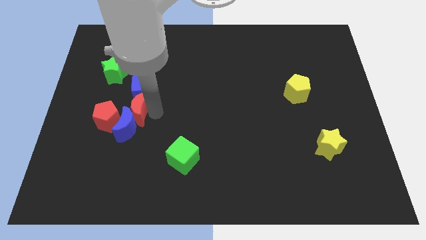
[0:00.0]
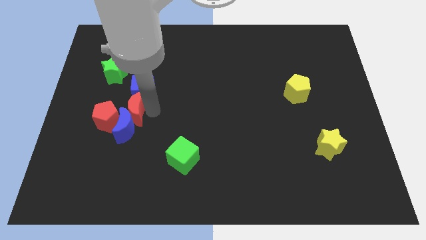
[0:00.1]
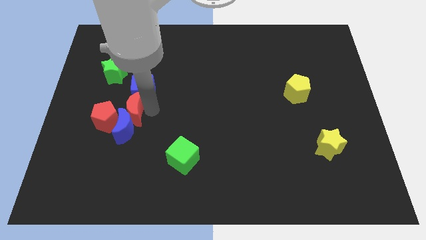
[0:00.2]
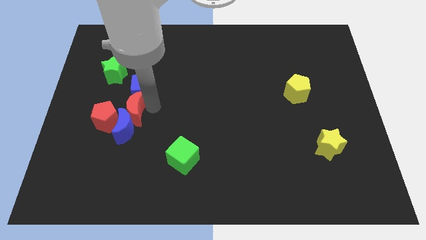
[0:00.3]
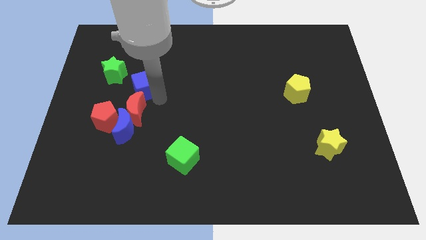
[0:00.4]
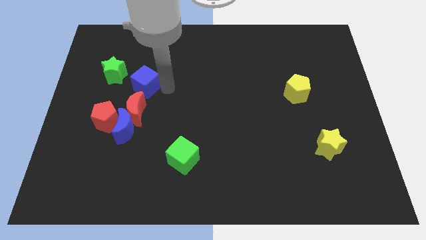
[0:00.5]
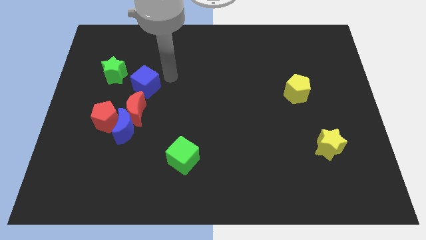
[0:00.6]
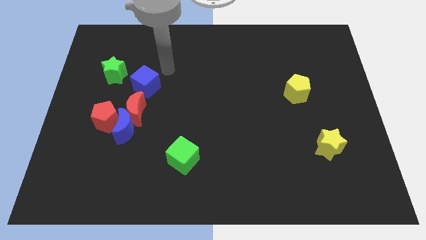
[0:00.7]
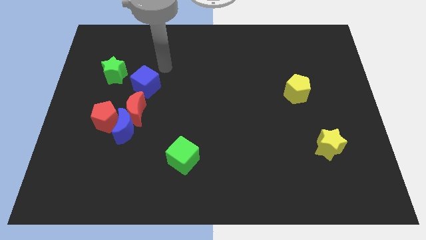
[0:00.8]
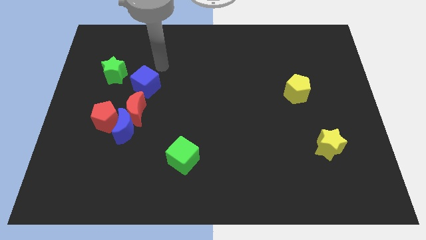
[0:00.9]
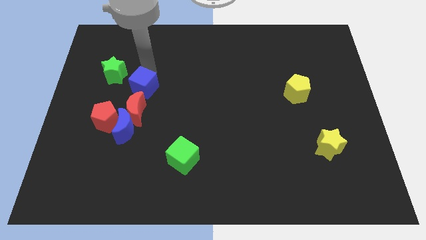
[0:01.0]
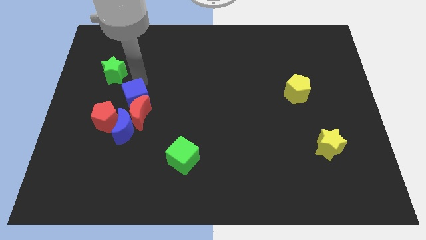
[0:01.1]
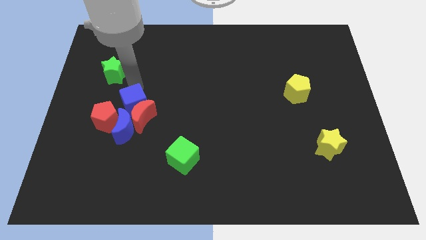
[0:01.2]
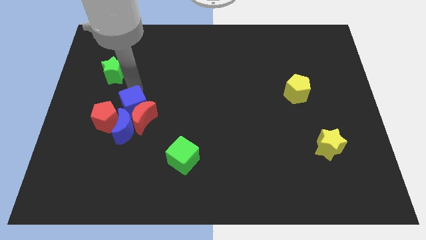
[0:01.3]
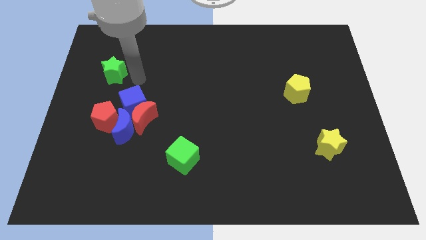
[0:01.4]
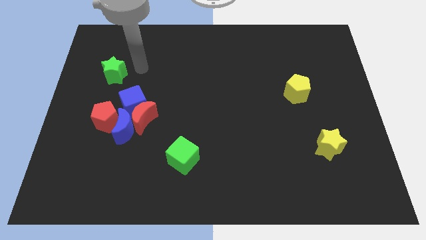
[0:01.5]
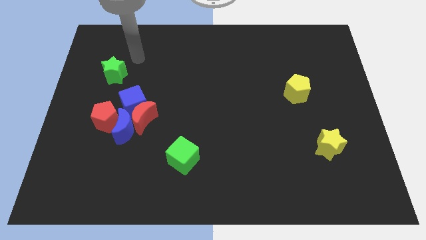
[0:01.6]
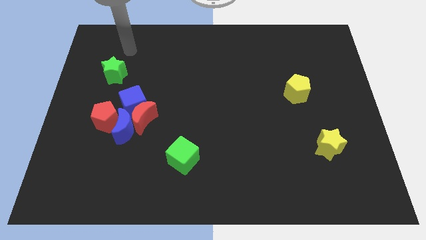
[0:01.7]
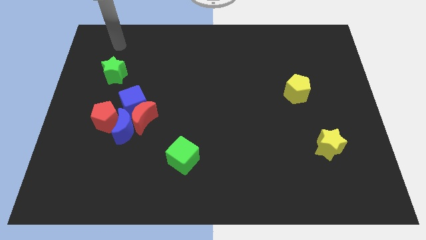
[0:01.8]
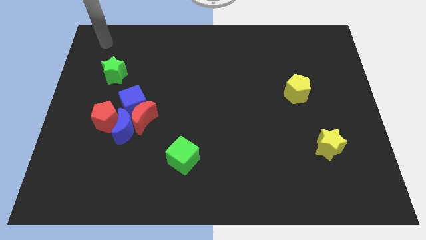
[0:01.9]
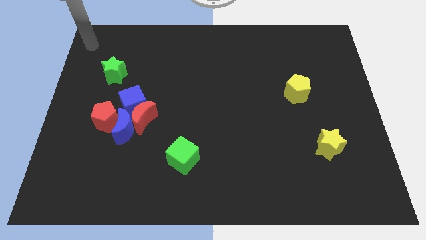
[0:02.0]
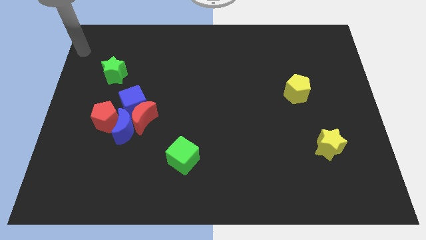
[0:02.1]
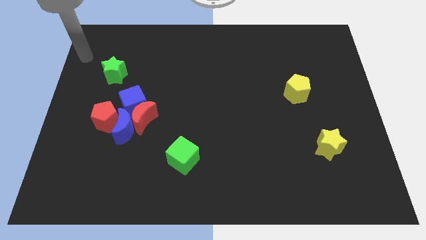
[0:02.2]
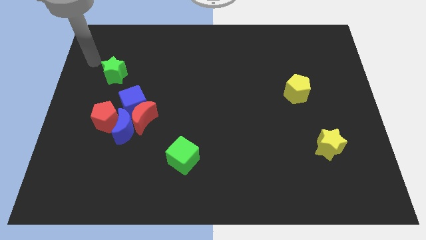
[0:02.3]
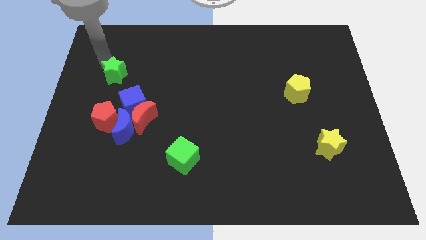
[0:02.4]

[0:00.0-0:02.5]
push the blue cube into the group of blocks

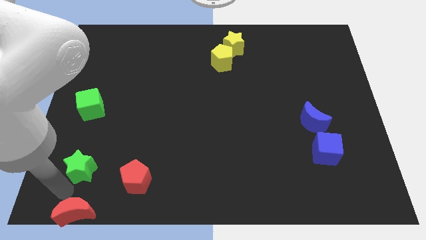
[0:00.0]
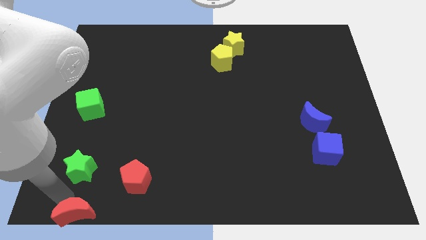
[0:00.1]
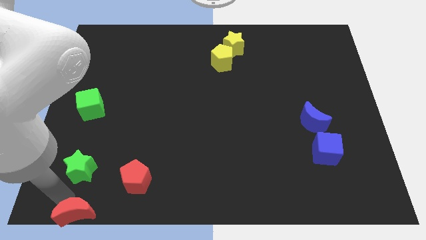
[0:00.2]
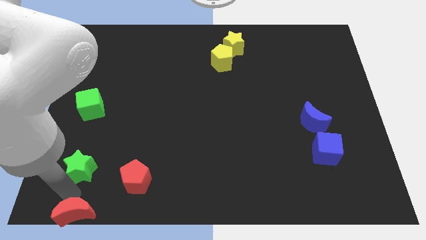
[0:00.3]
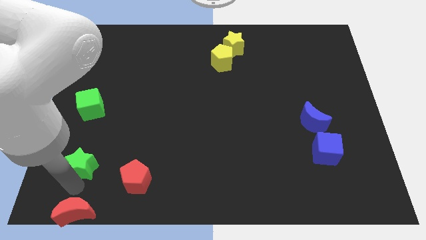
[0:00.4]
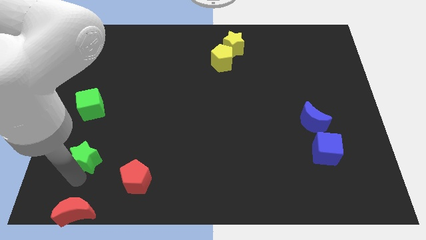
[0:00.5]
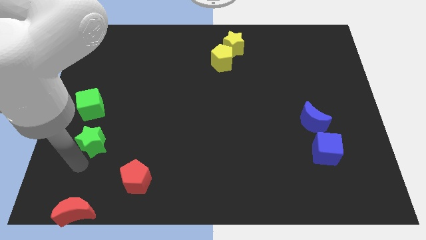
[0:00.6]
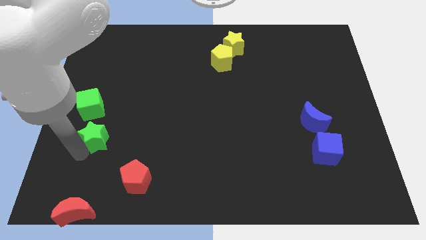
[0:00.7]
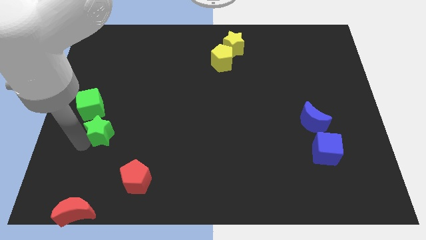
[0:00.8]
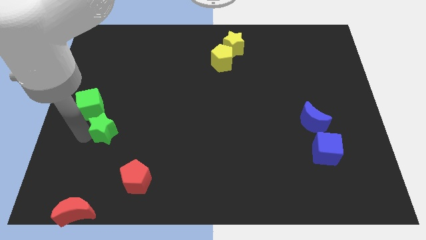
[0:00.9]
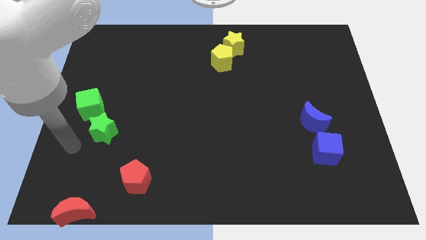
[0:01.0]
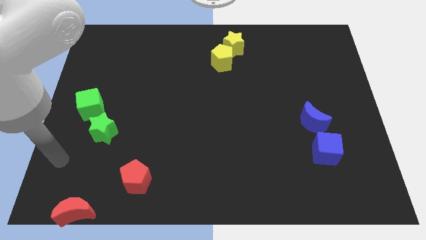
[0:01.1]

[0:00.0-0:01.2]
move the green star to the bottom of the green cube

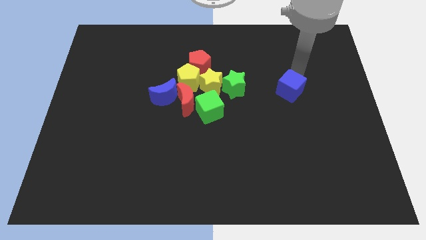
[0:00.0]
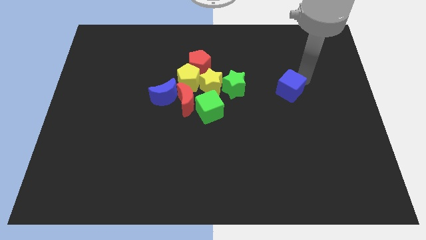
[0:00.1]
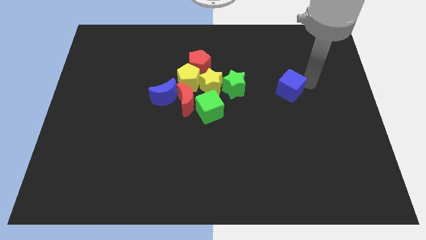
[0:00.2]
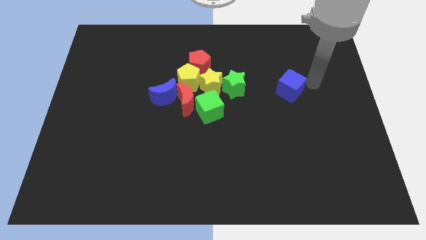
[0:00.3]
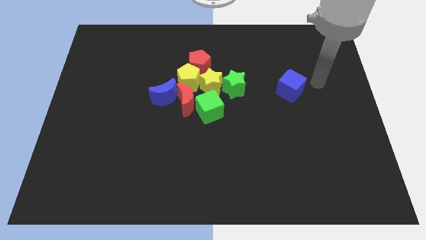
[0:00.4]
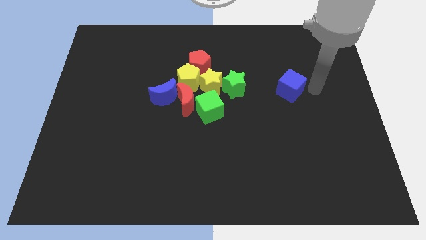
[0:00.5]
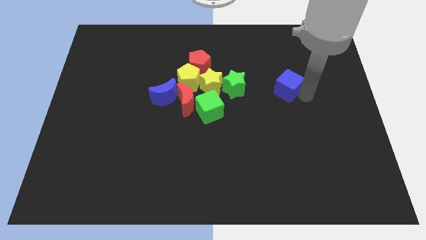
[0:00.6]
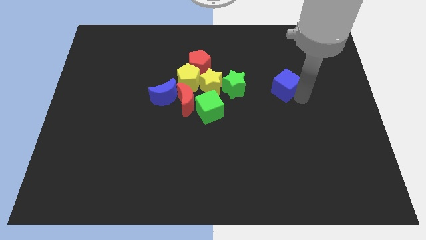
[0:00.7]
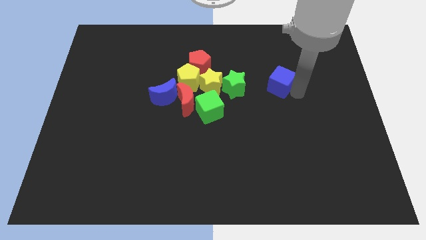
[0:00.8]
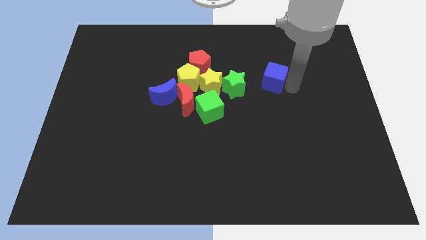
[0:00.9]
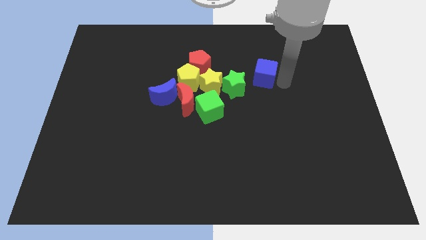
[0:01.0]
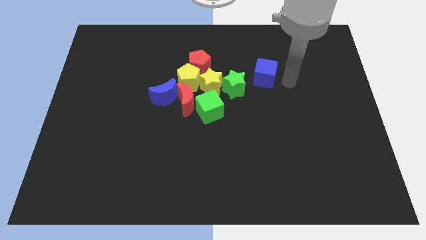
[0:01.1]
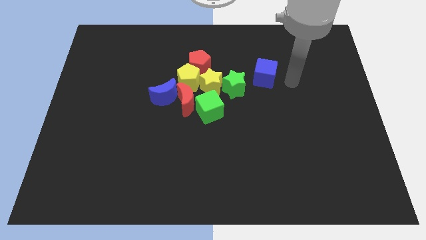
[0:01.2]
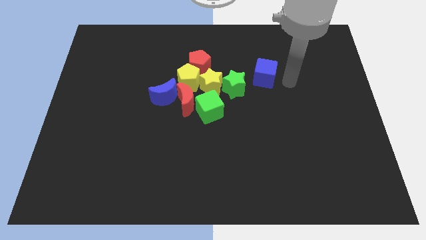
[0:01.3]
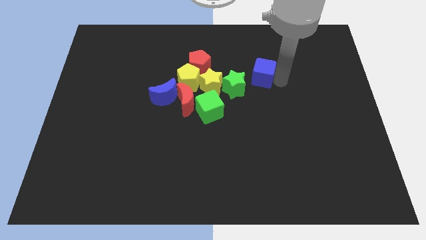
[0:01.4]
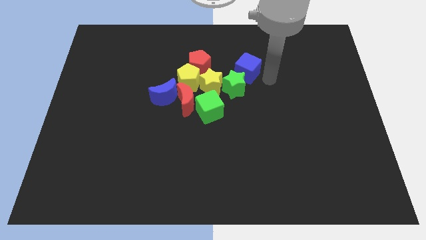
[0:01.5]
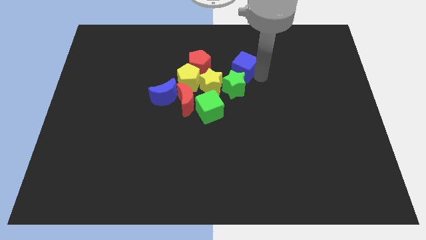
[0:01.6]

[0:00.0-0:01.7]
push the blue cube diagonally top right to green star

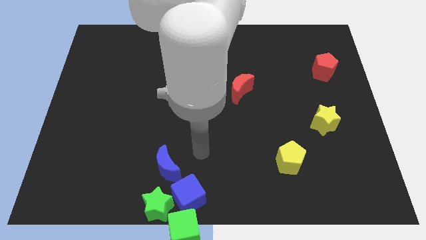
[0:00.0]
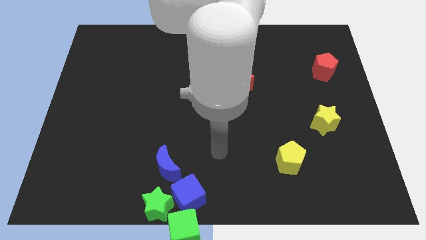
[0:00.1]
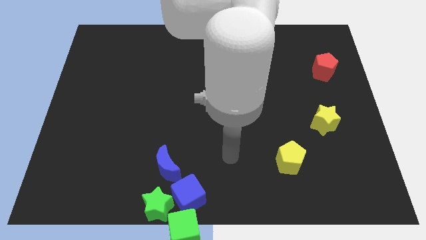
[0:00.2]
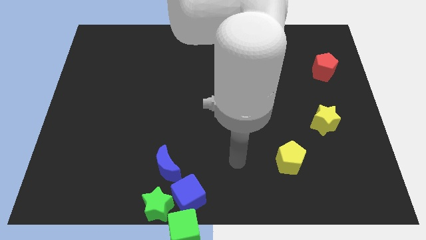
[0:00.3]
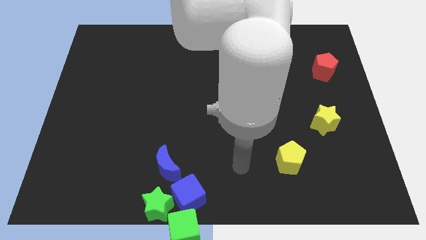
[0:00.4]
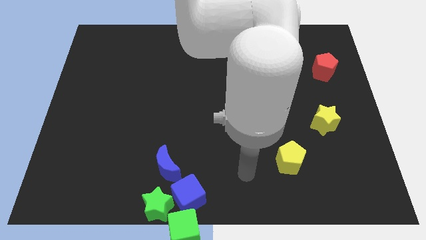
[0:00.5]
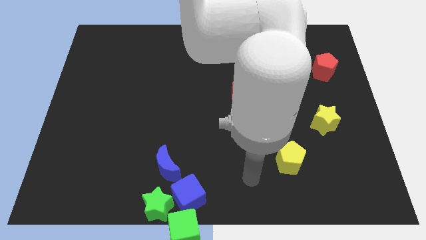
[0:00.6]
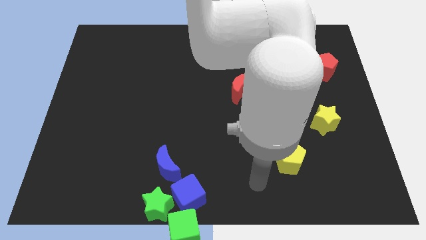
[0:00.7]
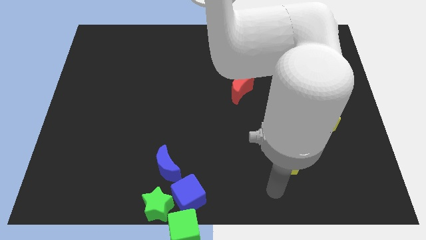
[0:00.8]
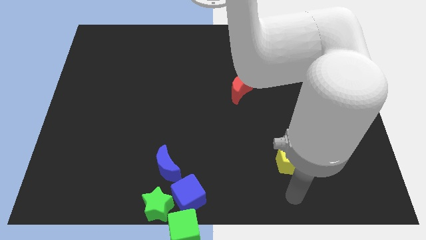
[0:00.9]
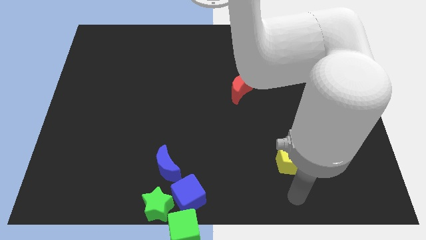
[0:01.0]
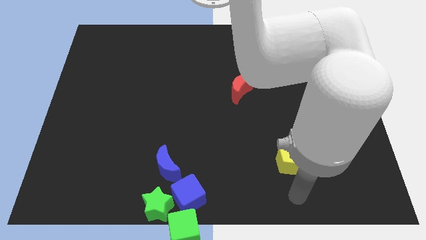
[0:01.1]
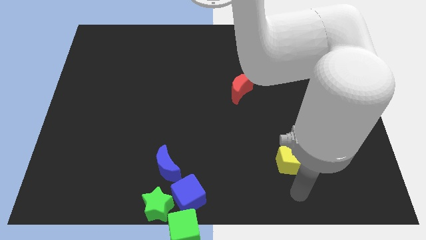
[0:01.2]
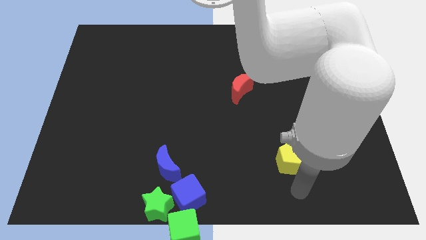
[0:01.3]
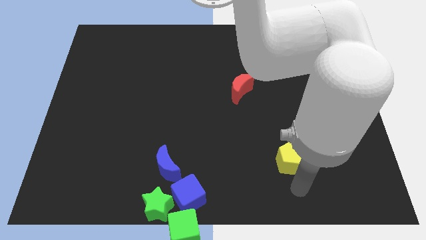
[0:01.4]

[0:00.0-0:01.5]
point the arm at the bottom of the yellow pentagon

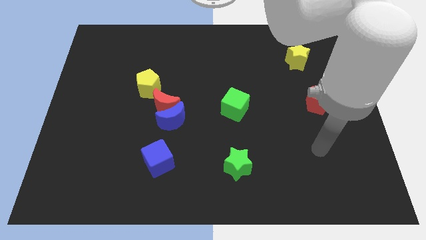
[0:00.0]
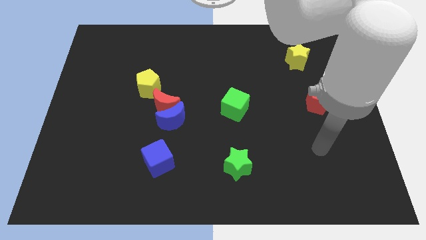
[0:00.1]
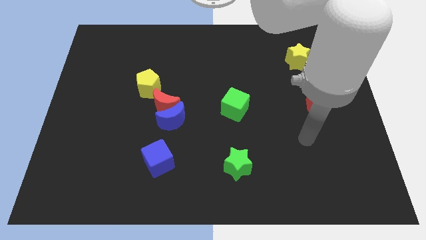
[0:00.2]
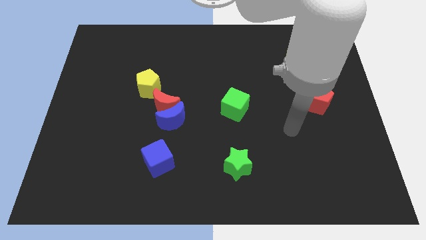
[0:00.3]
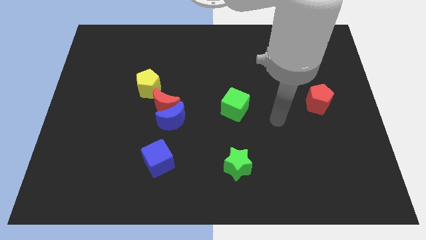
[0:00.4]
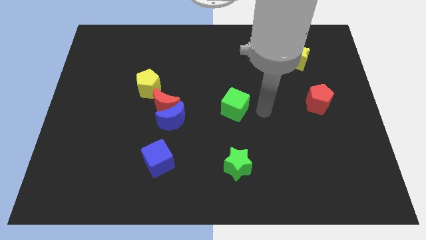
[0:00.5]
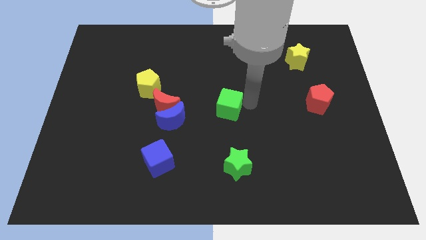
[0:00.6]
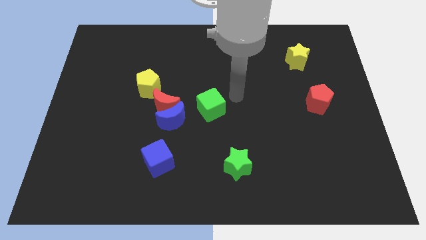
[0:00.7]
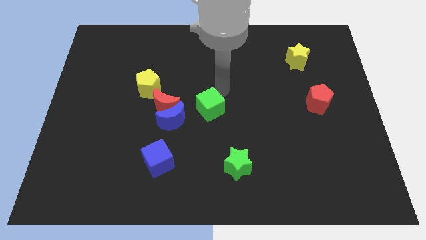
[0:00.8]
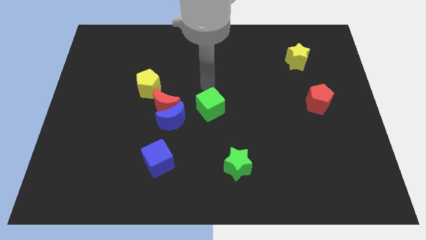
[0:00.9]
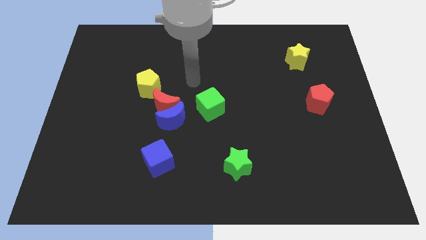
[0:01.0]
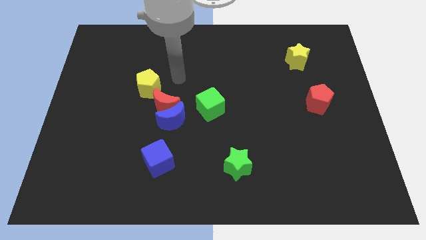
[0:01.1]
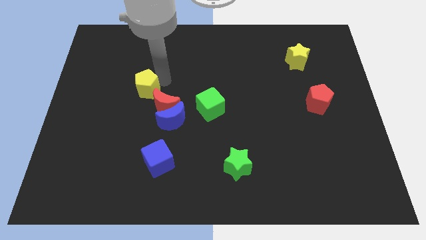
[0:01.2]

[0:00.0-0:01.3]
touch and move away from green cube

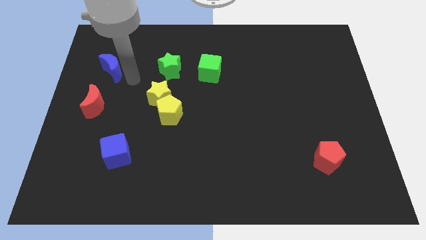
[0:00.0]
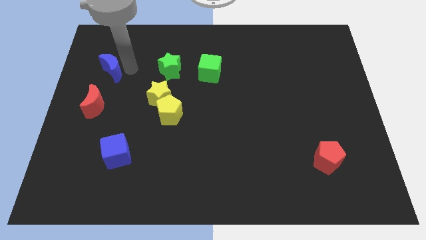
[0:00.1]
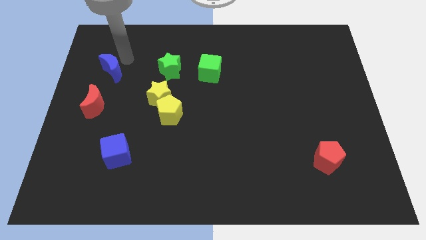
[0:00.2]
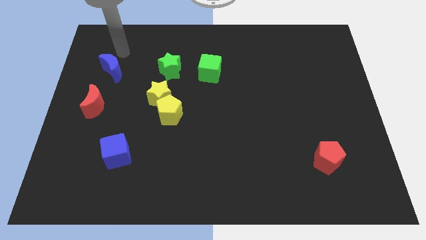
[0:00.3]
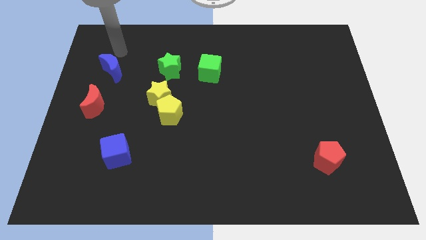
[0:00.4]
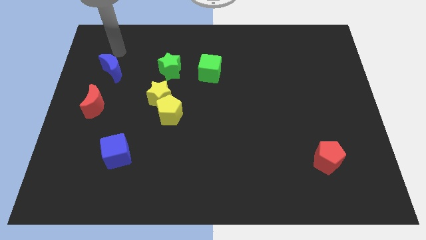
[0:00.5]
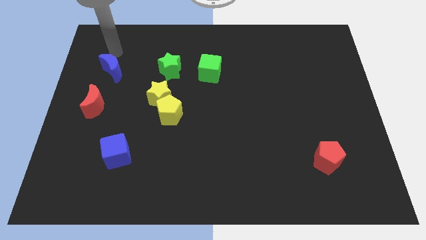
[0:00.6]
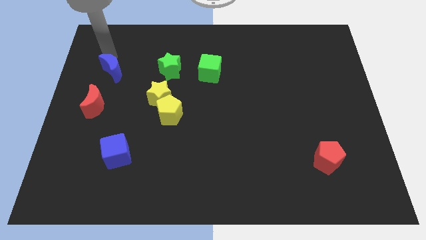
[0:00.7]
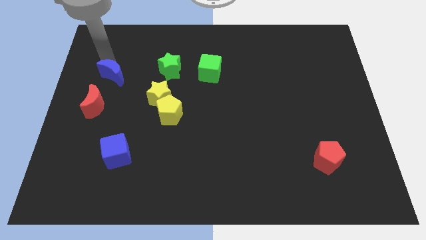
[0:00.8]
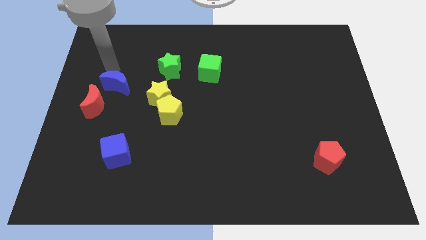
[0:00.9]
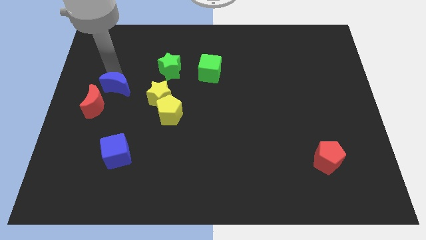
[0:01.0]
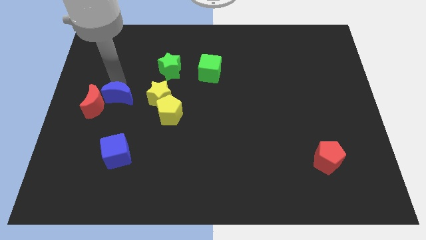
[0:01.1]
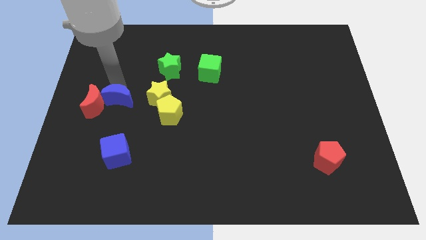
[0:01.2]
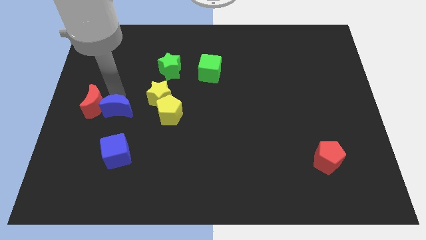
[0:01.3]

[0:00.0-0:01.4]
place blue moon to the right of red moon
